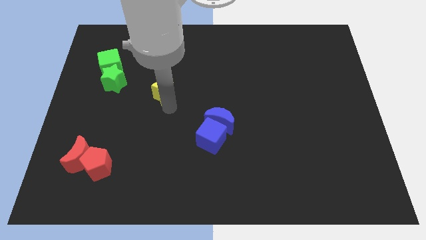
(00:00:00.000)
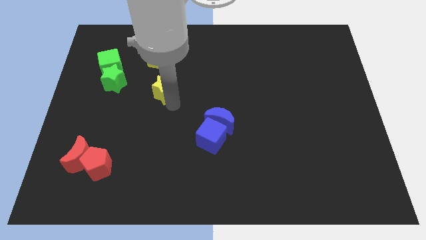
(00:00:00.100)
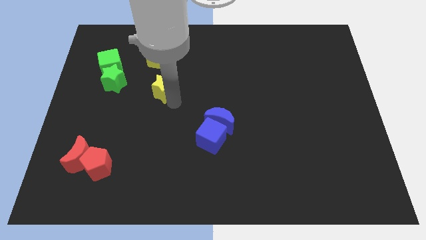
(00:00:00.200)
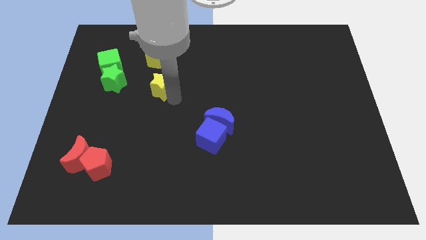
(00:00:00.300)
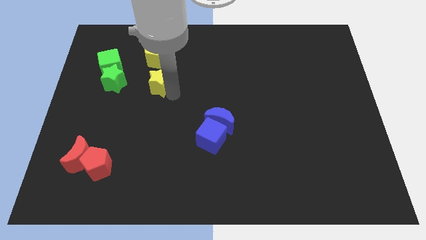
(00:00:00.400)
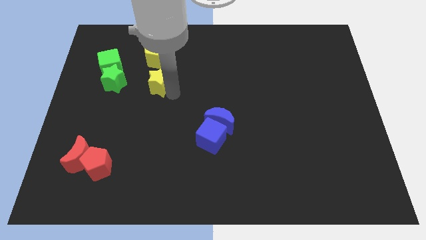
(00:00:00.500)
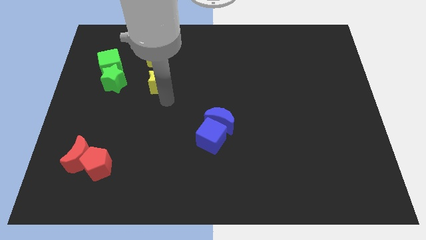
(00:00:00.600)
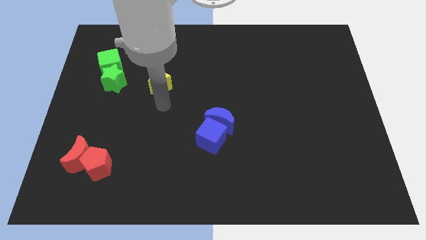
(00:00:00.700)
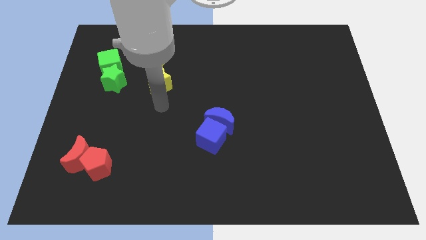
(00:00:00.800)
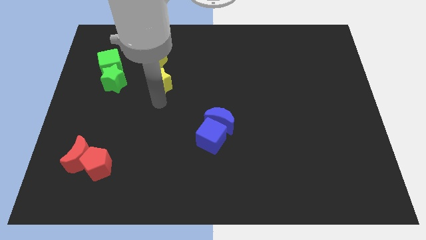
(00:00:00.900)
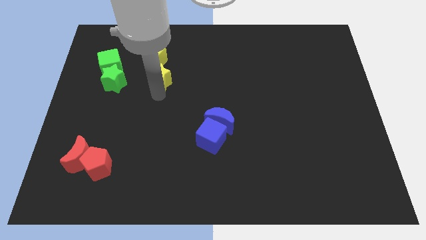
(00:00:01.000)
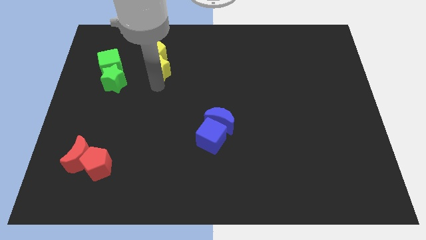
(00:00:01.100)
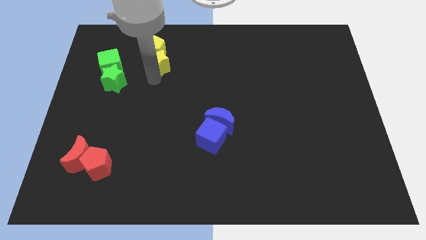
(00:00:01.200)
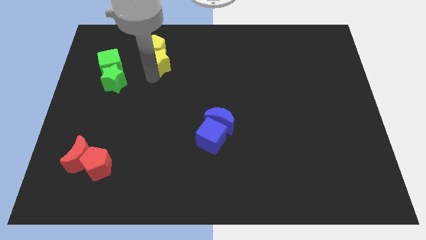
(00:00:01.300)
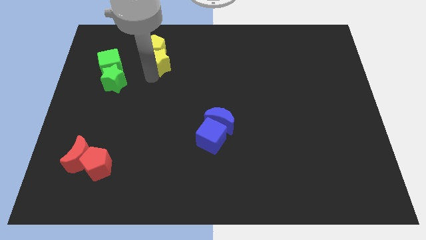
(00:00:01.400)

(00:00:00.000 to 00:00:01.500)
move the yellow star into the bottom side of the yellow pentagon

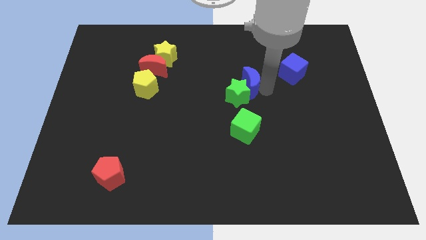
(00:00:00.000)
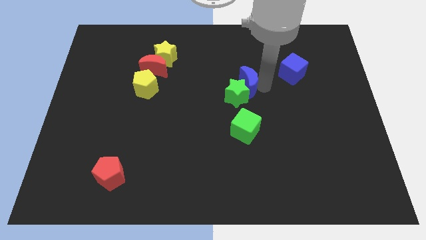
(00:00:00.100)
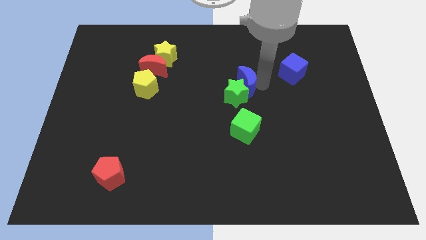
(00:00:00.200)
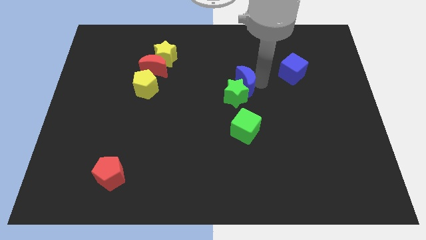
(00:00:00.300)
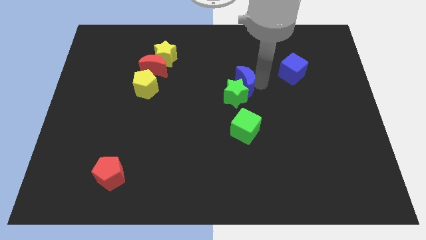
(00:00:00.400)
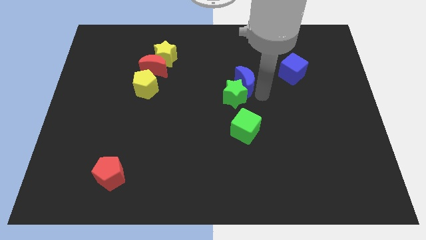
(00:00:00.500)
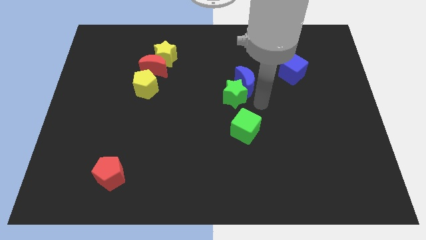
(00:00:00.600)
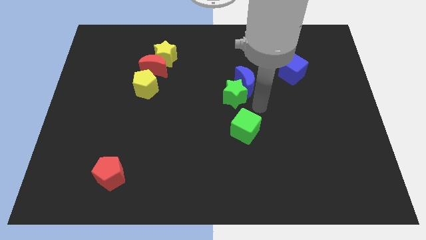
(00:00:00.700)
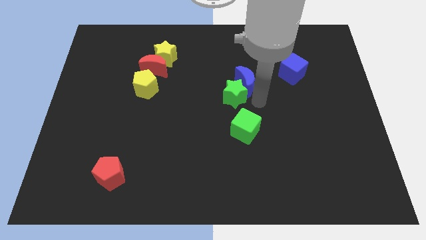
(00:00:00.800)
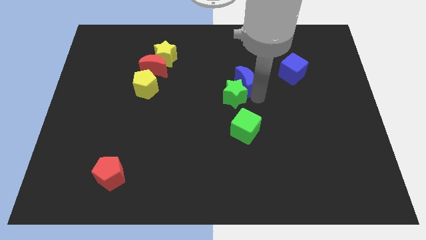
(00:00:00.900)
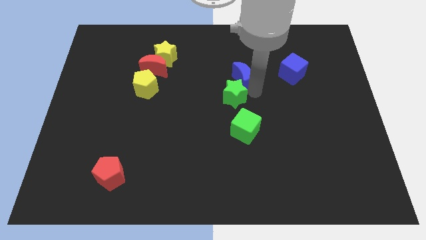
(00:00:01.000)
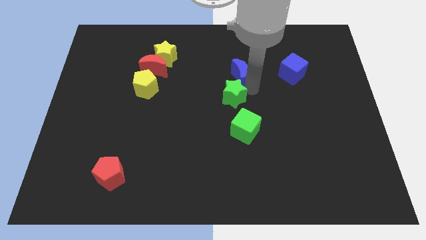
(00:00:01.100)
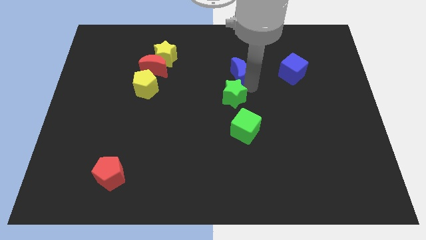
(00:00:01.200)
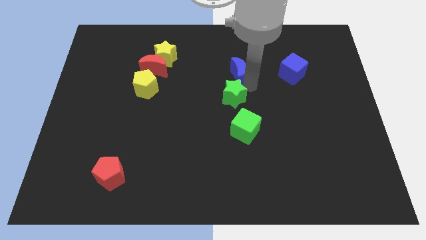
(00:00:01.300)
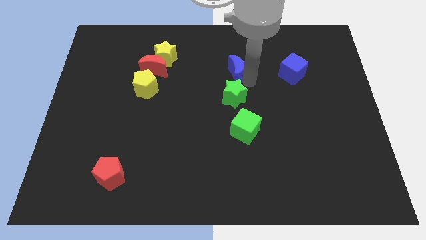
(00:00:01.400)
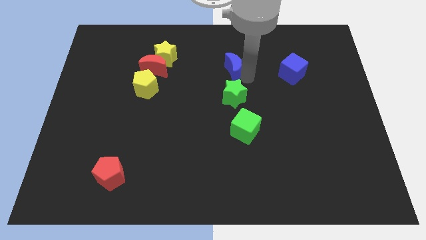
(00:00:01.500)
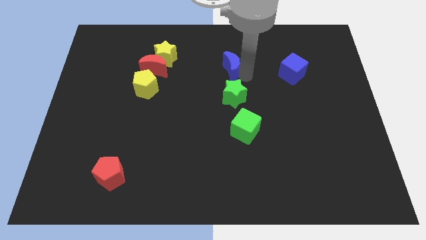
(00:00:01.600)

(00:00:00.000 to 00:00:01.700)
put the blue crescent on the top side of the green star

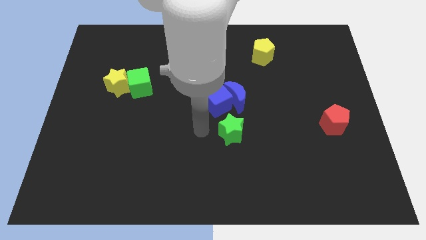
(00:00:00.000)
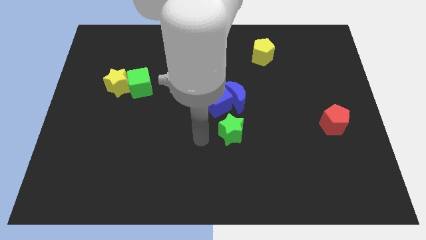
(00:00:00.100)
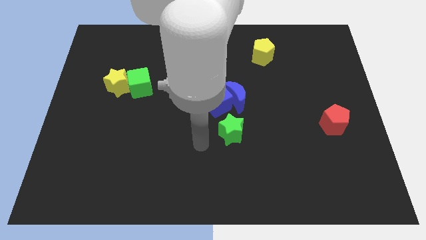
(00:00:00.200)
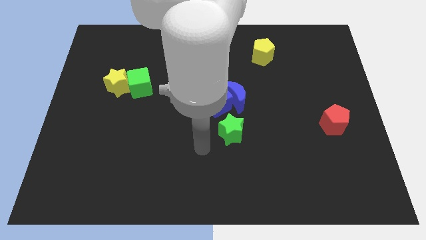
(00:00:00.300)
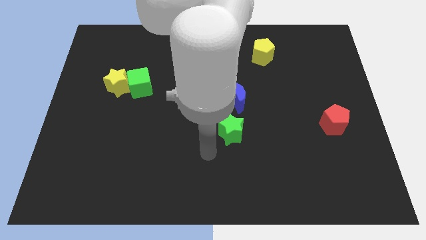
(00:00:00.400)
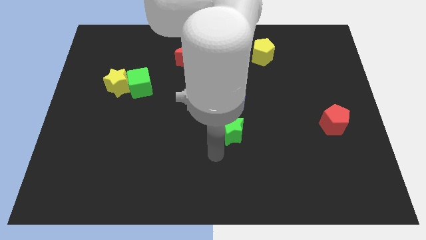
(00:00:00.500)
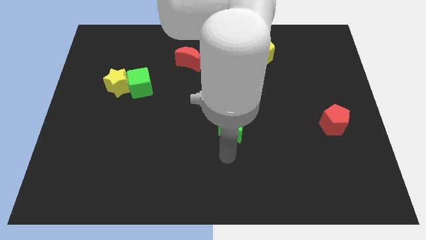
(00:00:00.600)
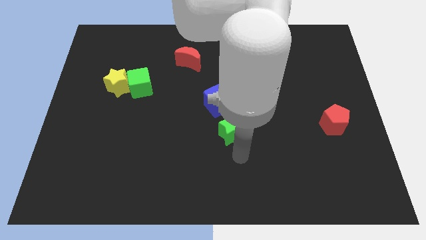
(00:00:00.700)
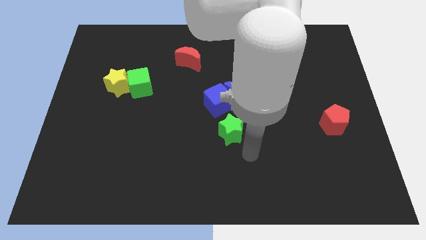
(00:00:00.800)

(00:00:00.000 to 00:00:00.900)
move the arm below the green star

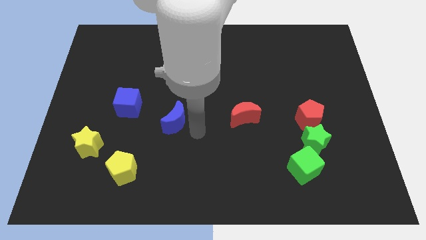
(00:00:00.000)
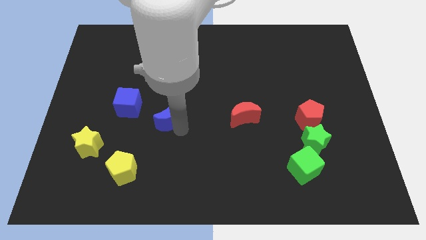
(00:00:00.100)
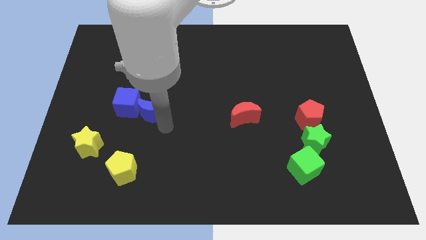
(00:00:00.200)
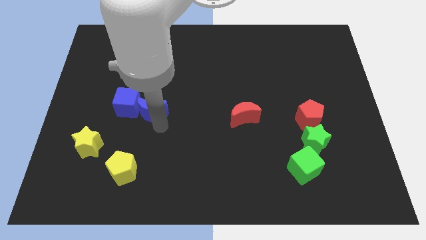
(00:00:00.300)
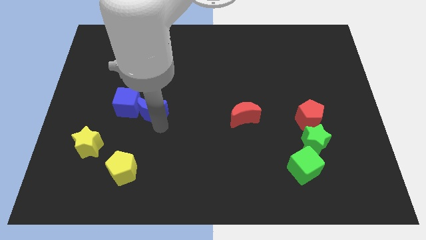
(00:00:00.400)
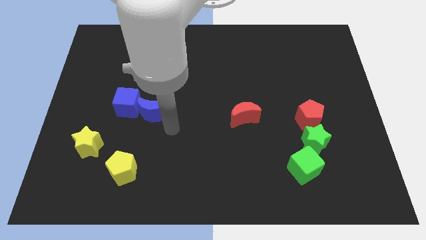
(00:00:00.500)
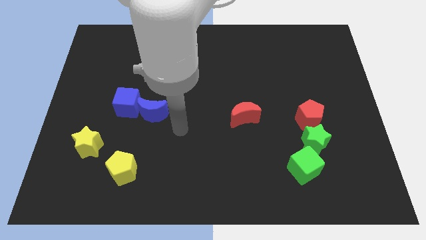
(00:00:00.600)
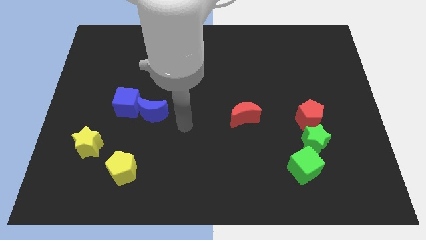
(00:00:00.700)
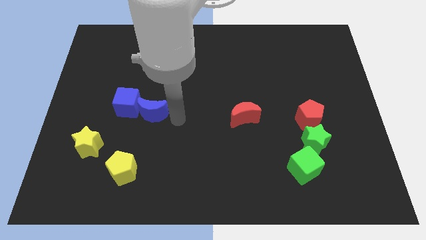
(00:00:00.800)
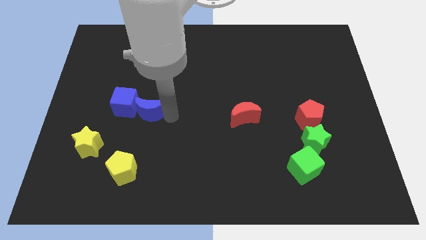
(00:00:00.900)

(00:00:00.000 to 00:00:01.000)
push the blue crescent into the blue moon

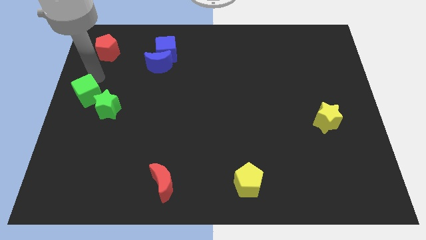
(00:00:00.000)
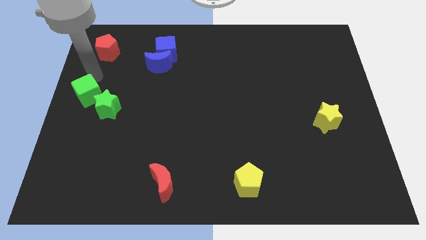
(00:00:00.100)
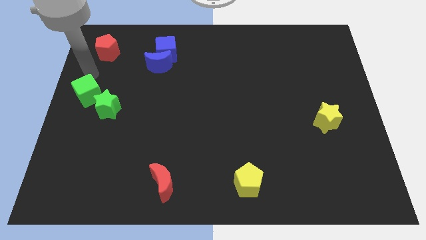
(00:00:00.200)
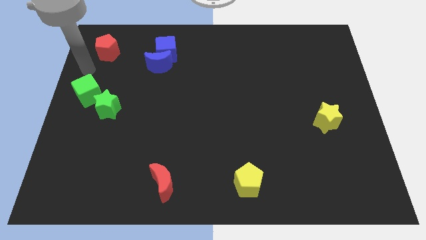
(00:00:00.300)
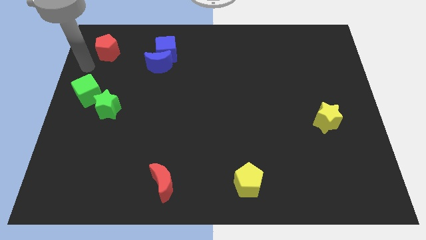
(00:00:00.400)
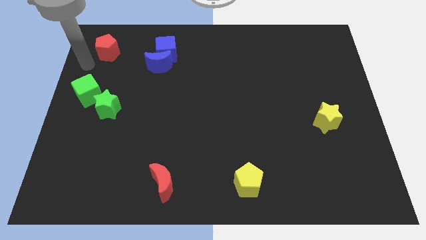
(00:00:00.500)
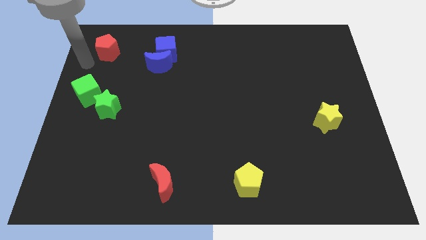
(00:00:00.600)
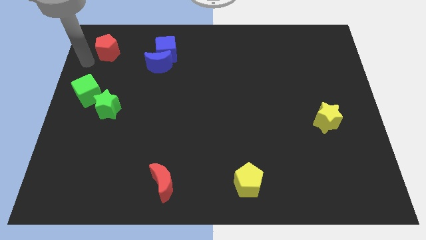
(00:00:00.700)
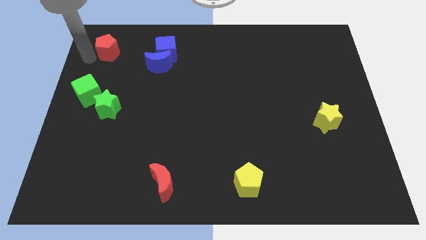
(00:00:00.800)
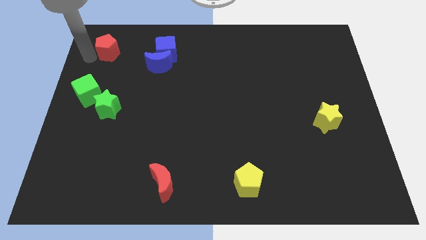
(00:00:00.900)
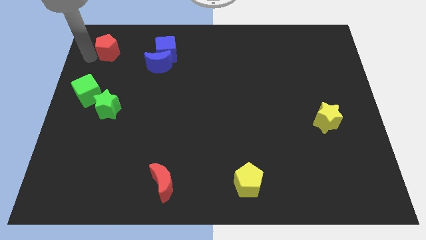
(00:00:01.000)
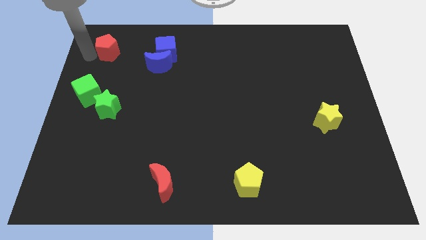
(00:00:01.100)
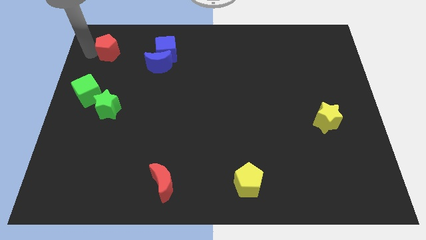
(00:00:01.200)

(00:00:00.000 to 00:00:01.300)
move your arm left to the red pentagon

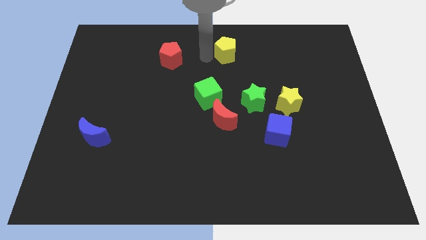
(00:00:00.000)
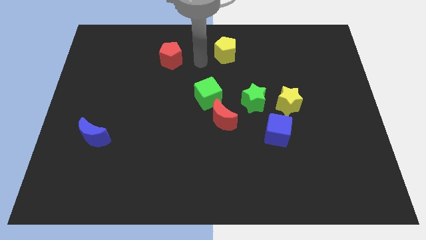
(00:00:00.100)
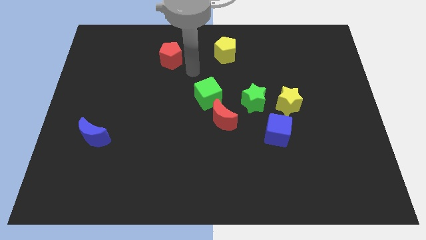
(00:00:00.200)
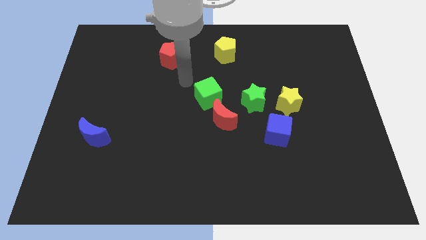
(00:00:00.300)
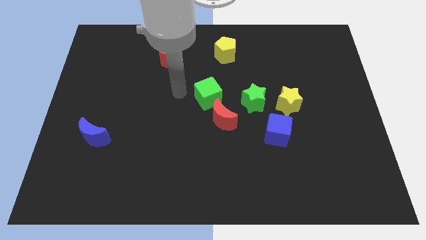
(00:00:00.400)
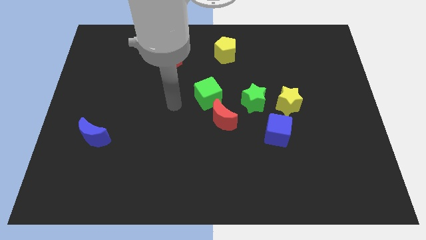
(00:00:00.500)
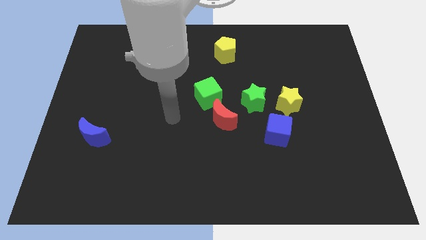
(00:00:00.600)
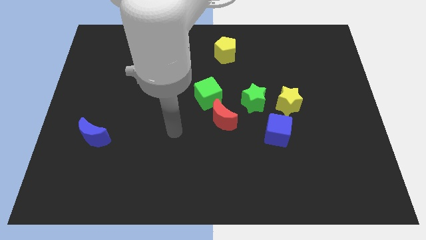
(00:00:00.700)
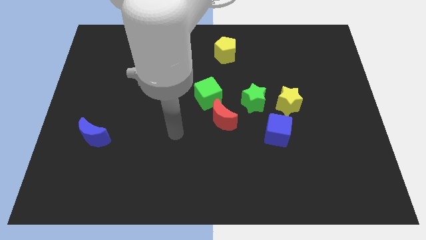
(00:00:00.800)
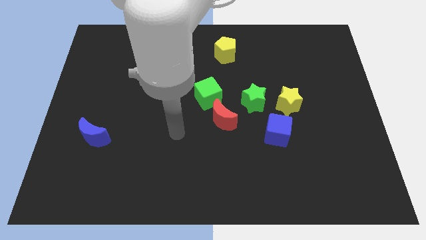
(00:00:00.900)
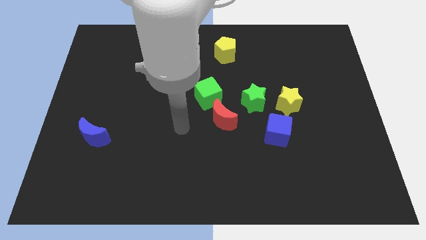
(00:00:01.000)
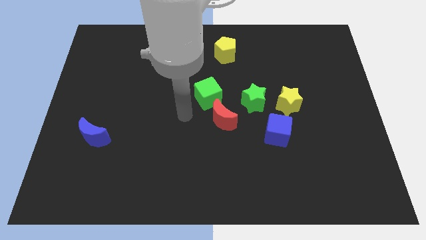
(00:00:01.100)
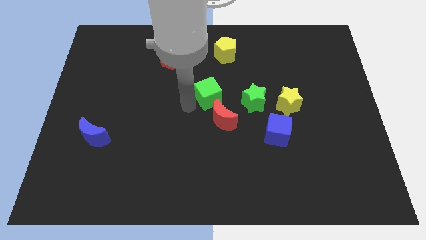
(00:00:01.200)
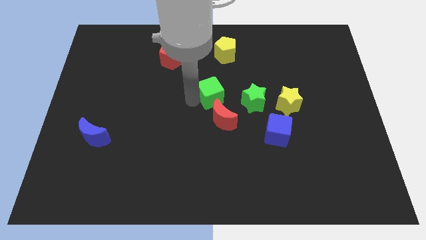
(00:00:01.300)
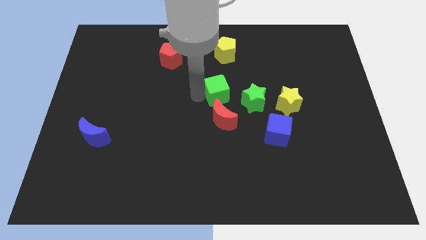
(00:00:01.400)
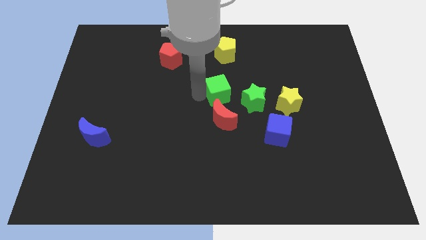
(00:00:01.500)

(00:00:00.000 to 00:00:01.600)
move your arm around the green cube

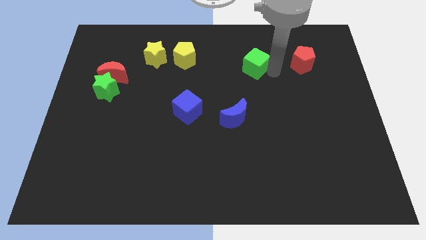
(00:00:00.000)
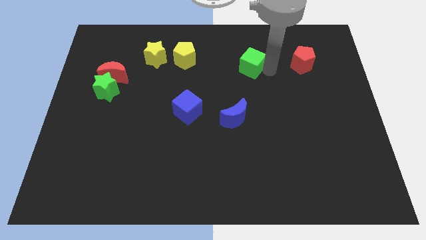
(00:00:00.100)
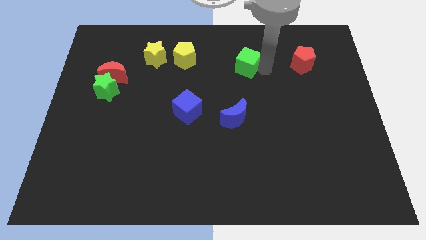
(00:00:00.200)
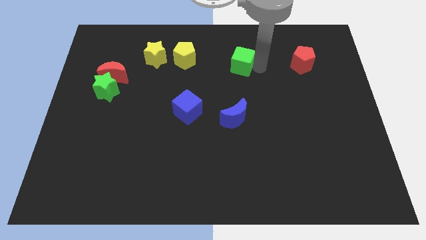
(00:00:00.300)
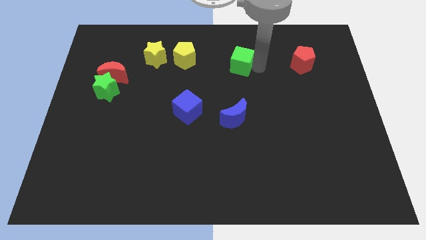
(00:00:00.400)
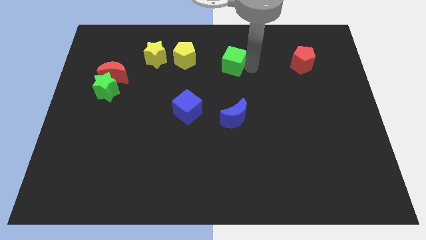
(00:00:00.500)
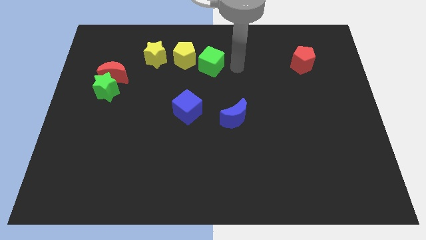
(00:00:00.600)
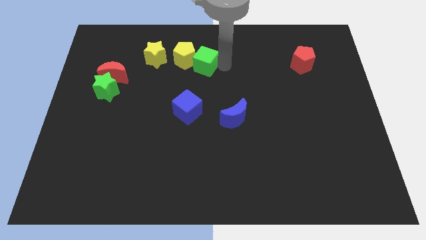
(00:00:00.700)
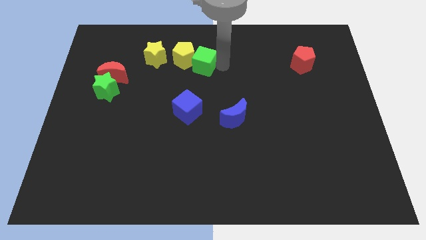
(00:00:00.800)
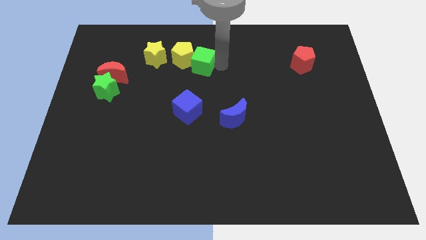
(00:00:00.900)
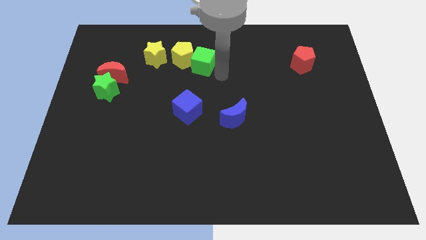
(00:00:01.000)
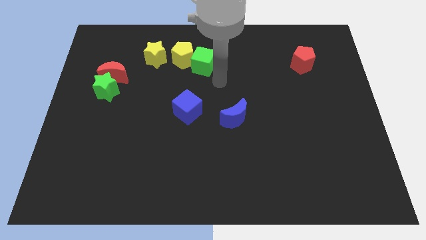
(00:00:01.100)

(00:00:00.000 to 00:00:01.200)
move the green cube to the right side of the yellow pentagon
